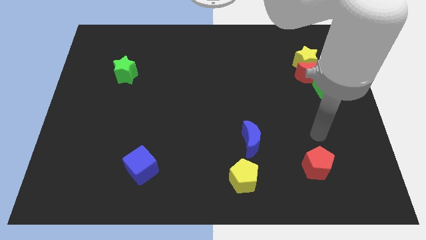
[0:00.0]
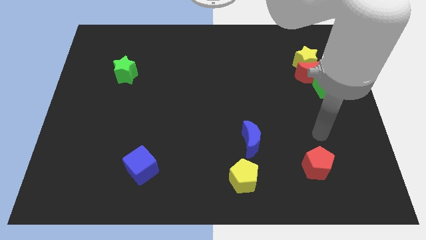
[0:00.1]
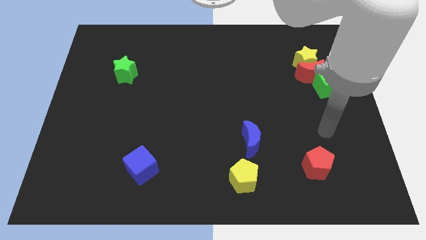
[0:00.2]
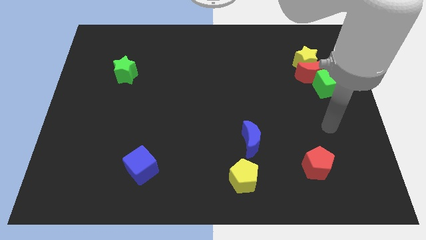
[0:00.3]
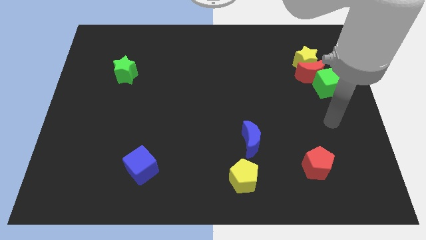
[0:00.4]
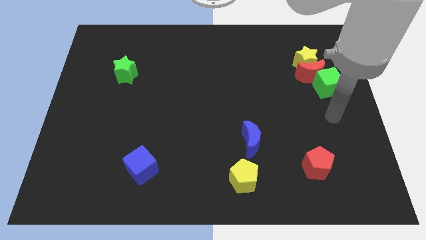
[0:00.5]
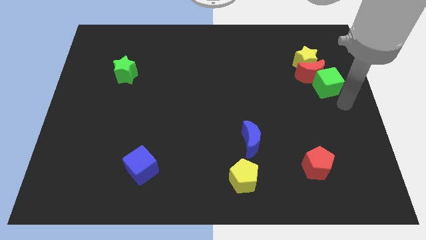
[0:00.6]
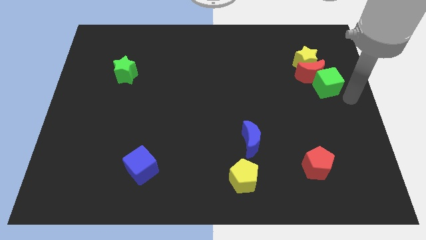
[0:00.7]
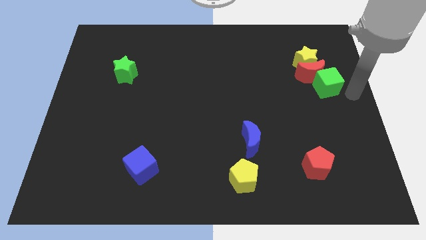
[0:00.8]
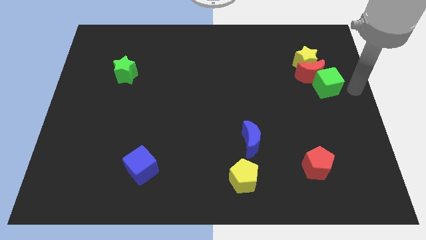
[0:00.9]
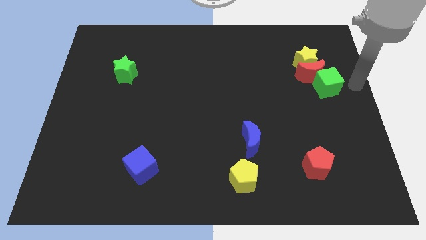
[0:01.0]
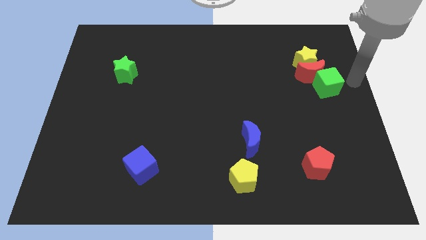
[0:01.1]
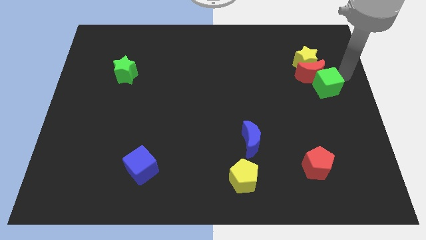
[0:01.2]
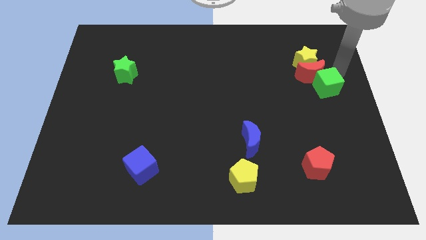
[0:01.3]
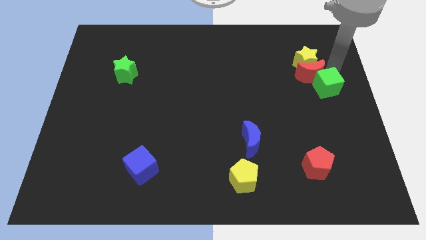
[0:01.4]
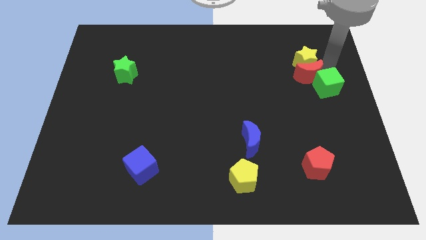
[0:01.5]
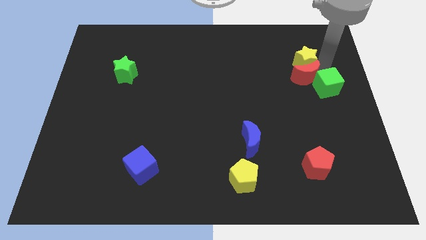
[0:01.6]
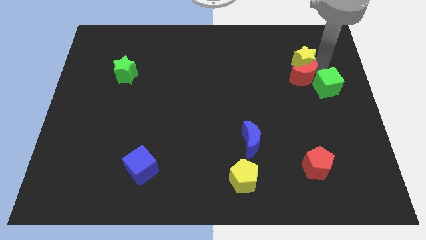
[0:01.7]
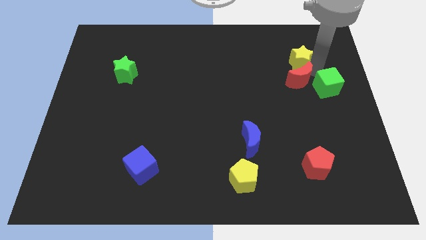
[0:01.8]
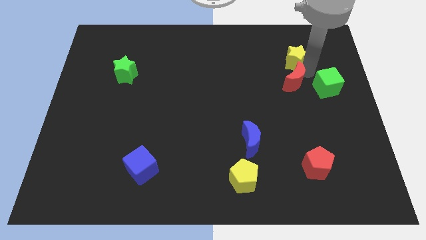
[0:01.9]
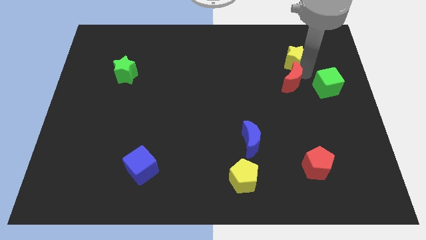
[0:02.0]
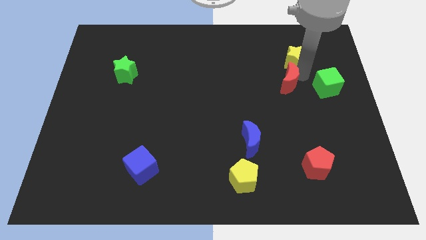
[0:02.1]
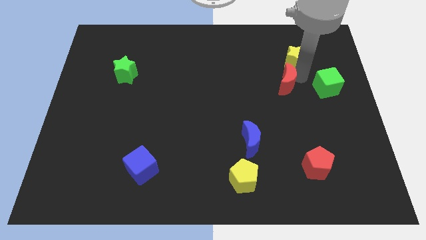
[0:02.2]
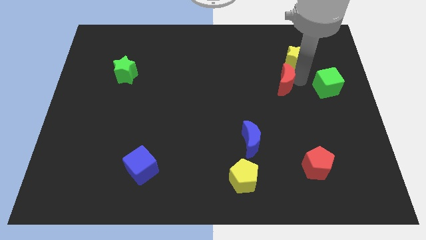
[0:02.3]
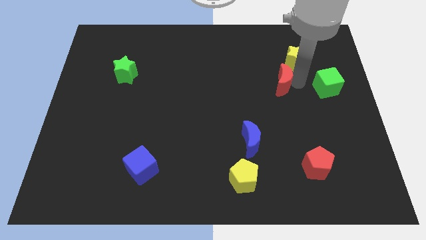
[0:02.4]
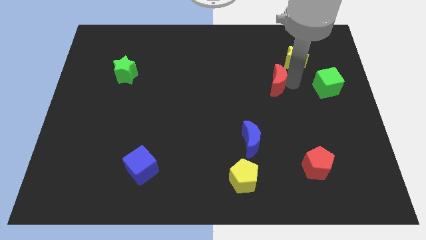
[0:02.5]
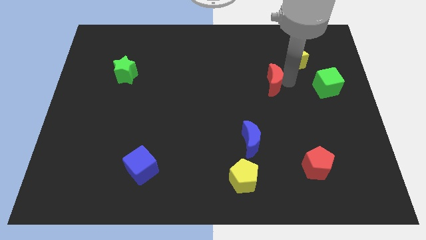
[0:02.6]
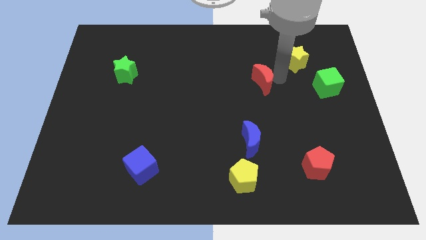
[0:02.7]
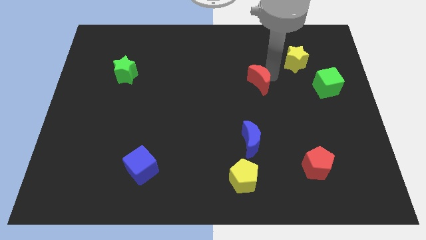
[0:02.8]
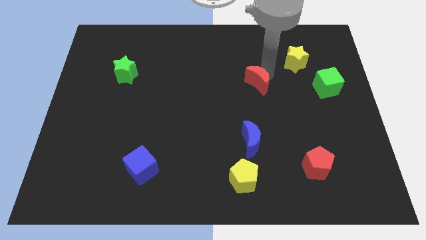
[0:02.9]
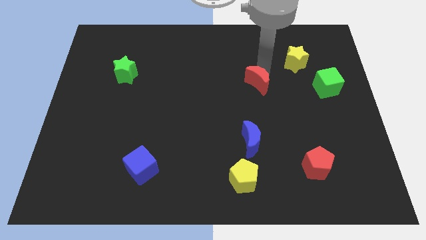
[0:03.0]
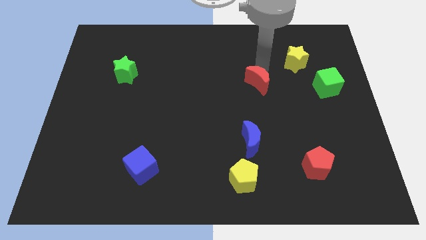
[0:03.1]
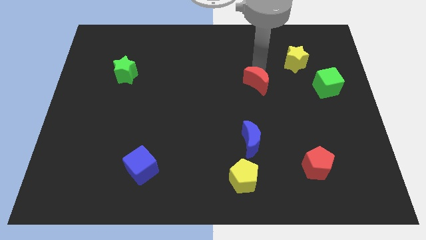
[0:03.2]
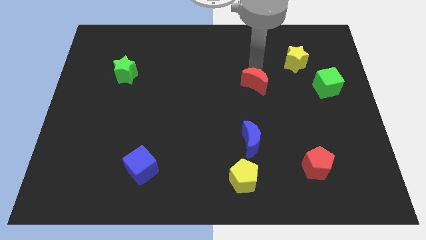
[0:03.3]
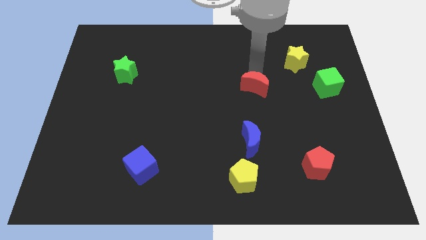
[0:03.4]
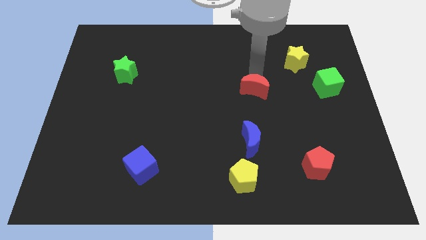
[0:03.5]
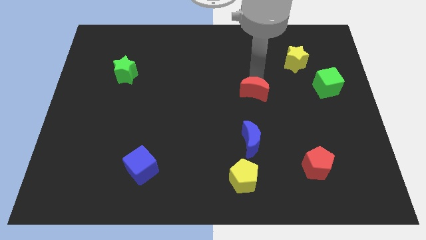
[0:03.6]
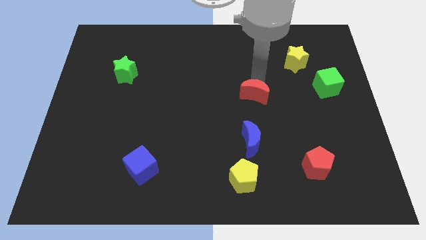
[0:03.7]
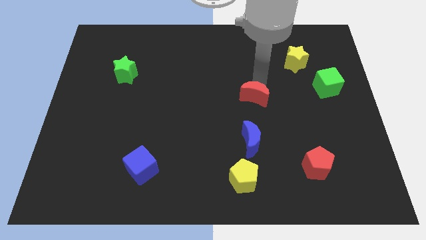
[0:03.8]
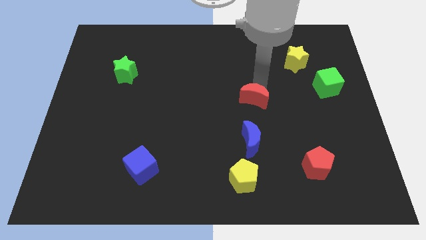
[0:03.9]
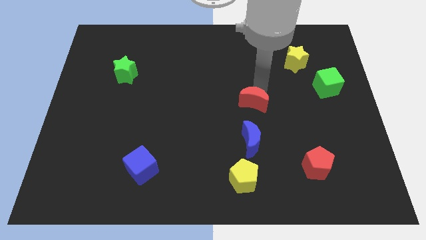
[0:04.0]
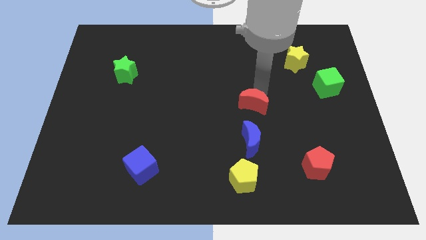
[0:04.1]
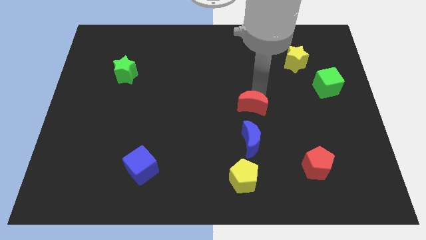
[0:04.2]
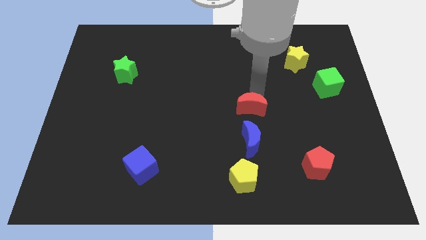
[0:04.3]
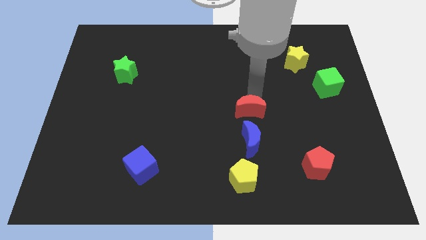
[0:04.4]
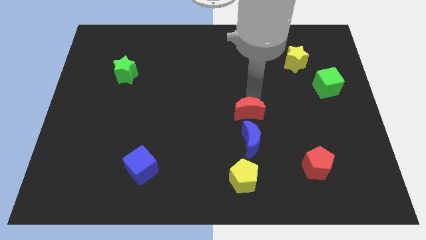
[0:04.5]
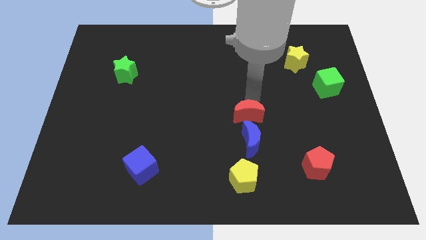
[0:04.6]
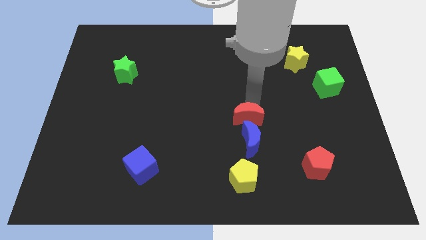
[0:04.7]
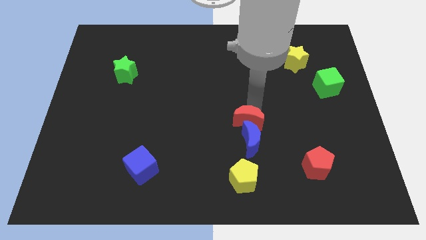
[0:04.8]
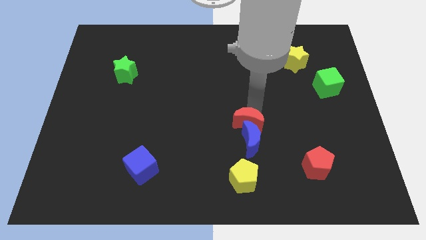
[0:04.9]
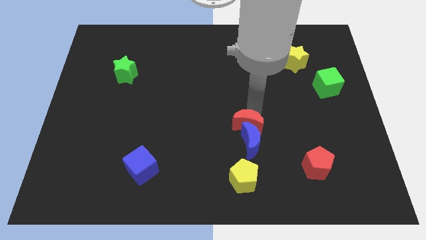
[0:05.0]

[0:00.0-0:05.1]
put the red moon close to the blue moon

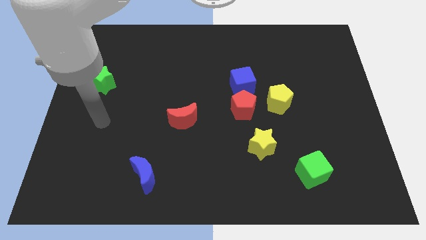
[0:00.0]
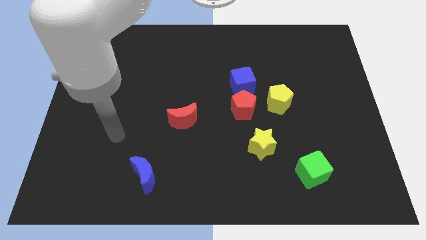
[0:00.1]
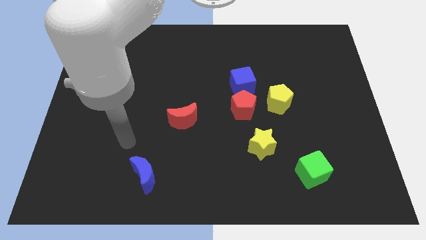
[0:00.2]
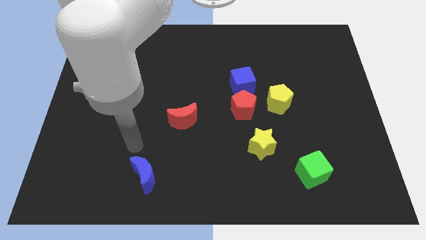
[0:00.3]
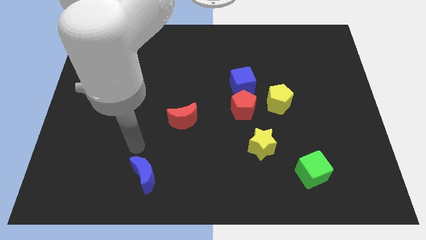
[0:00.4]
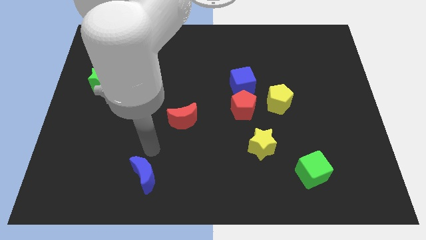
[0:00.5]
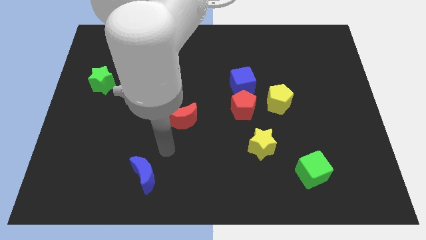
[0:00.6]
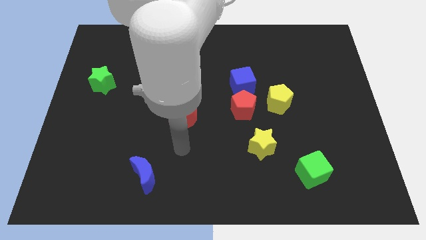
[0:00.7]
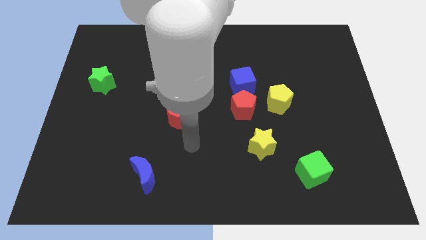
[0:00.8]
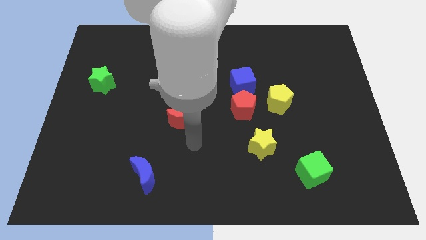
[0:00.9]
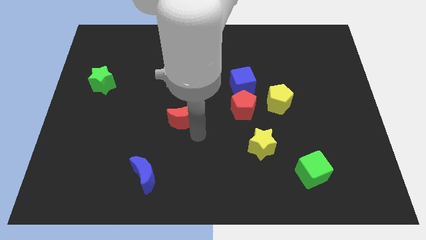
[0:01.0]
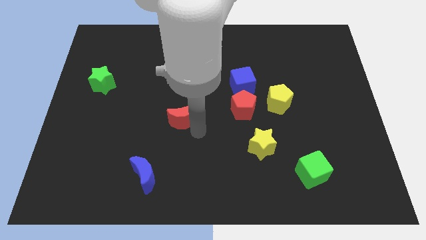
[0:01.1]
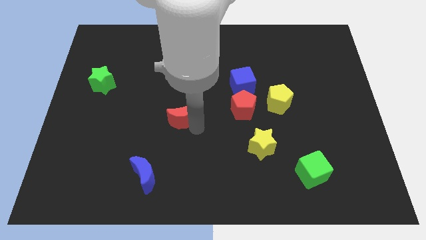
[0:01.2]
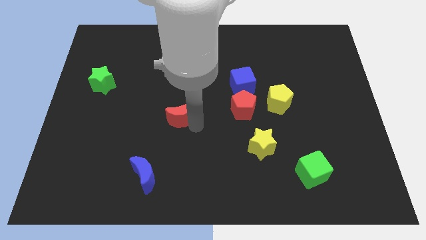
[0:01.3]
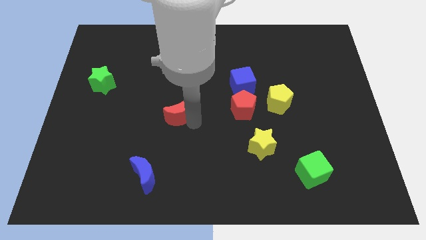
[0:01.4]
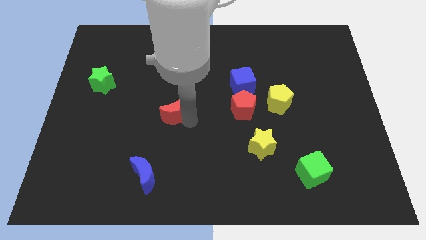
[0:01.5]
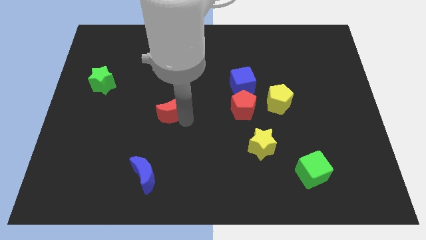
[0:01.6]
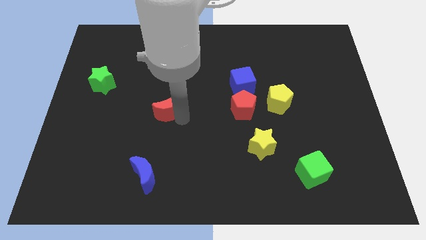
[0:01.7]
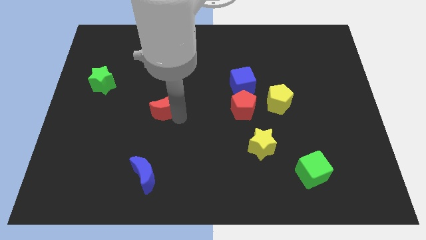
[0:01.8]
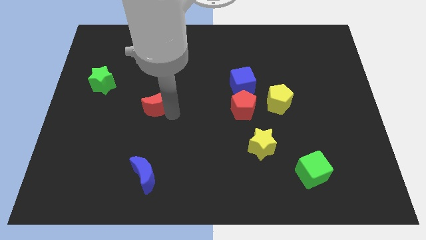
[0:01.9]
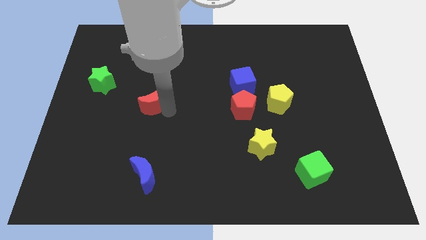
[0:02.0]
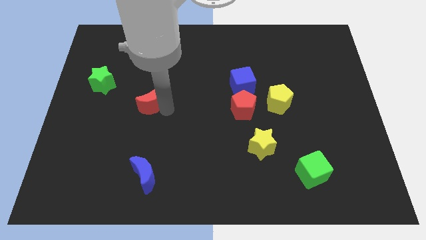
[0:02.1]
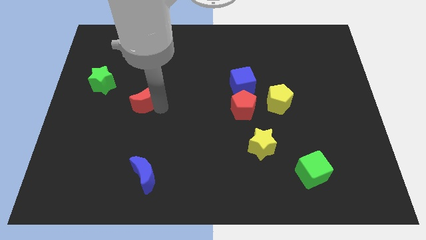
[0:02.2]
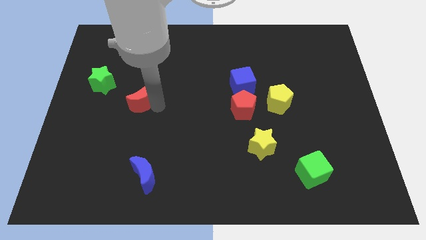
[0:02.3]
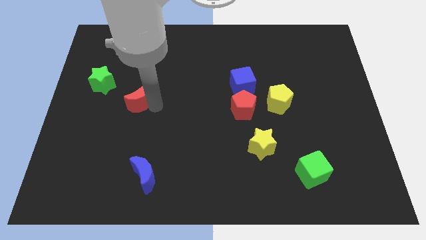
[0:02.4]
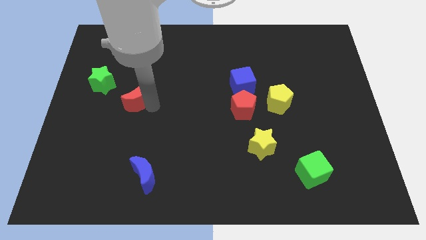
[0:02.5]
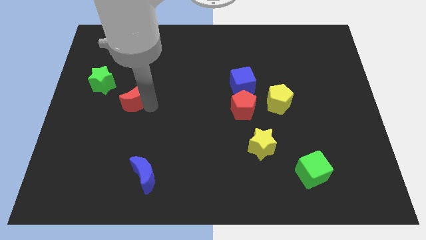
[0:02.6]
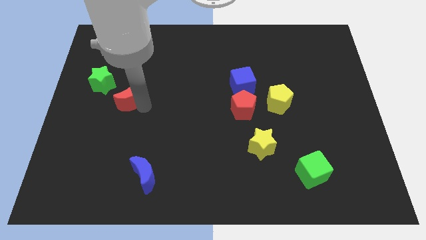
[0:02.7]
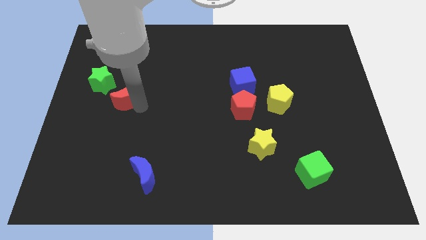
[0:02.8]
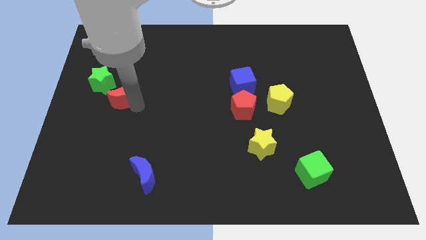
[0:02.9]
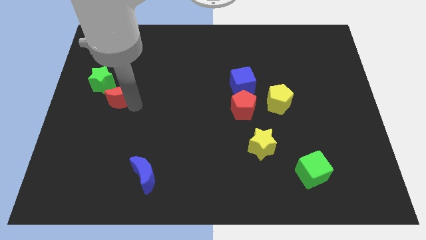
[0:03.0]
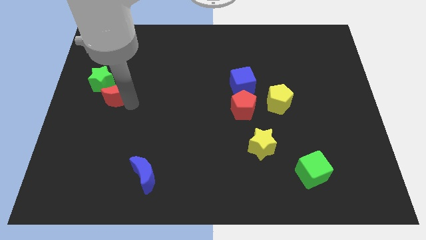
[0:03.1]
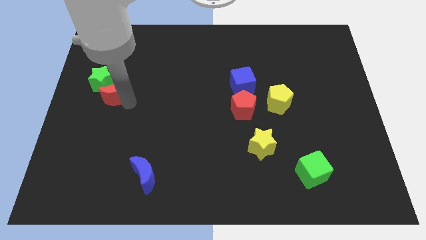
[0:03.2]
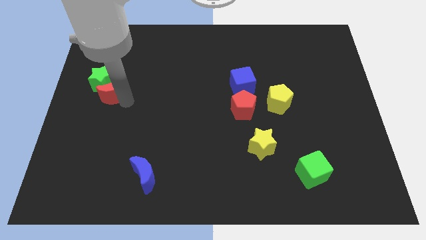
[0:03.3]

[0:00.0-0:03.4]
put the red moon close to the green star
